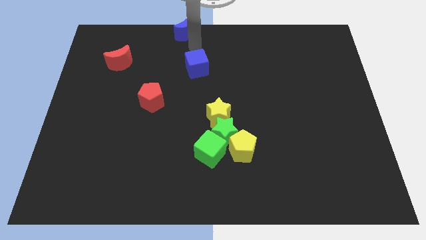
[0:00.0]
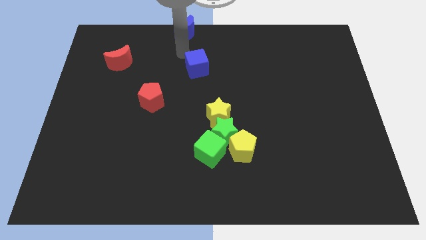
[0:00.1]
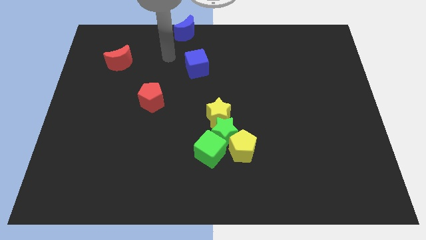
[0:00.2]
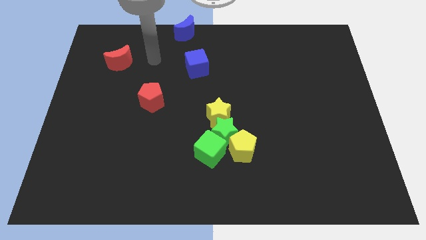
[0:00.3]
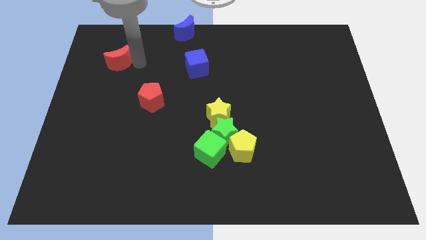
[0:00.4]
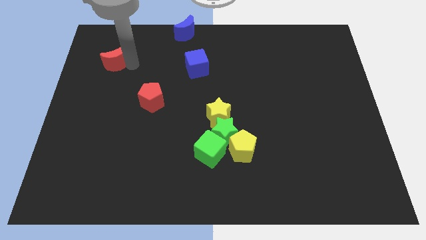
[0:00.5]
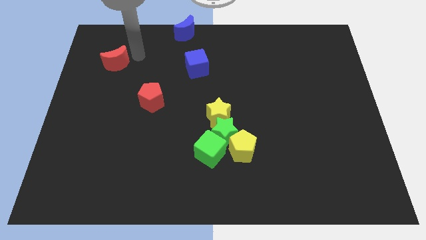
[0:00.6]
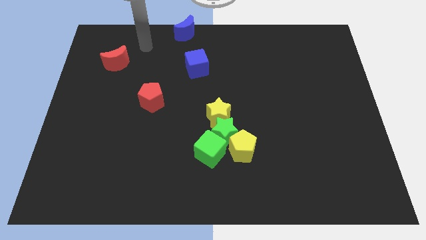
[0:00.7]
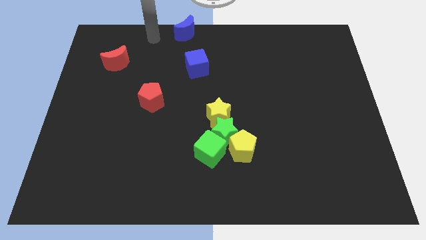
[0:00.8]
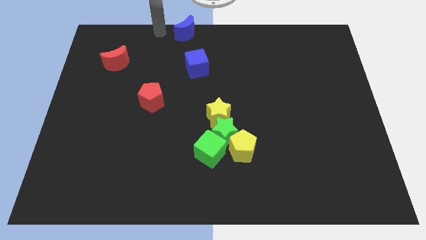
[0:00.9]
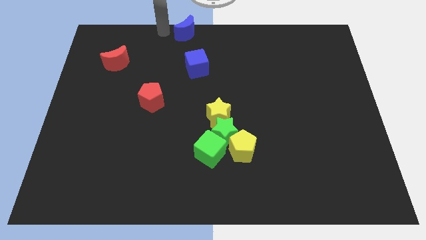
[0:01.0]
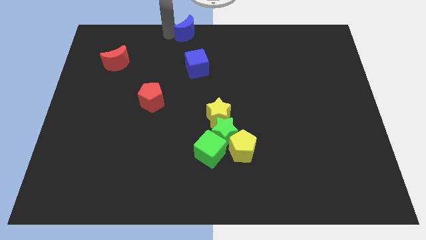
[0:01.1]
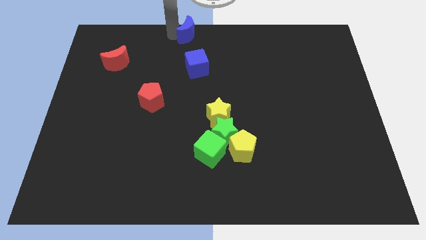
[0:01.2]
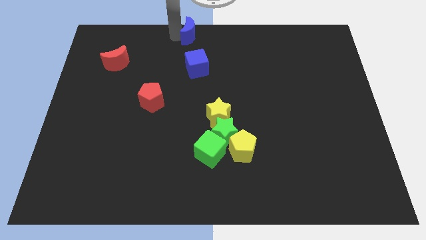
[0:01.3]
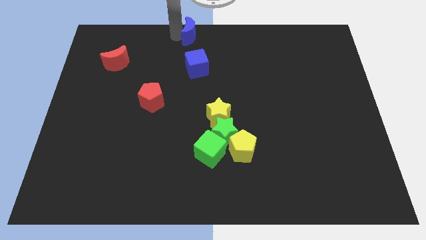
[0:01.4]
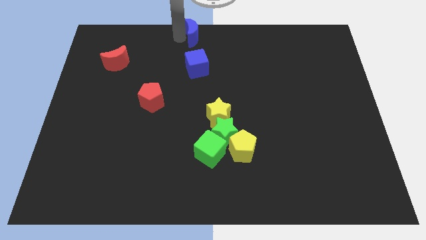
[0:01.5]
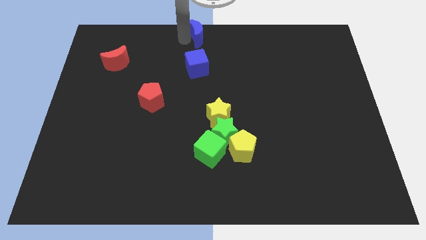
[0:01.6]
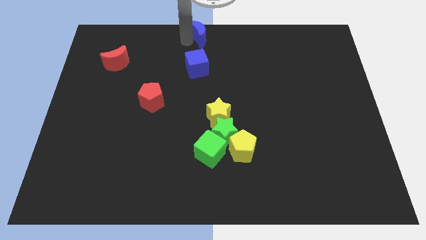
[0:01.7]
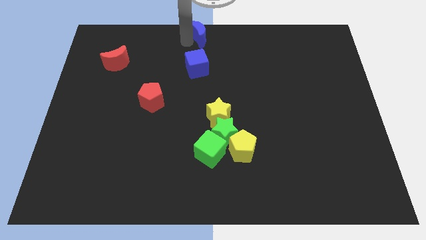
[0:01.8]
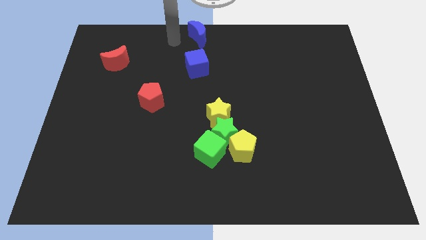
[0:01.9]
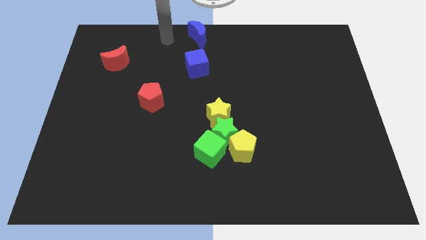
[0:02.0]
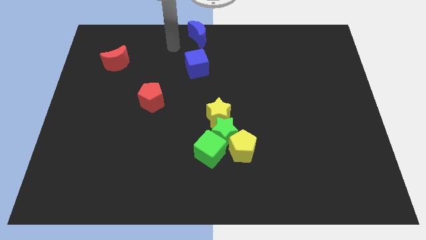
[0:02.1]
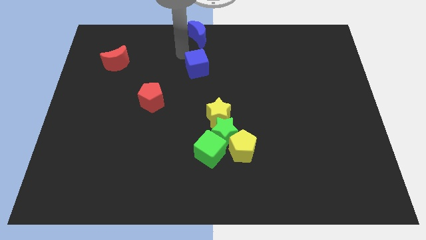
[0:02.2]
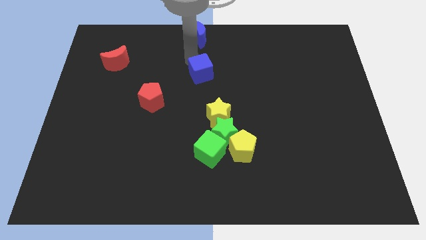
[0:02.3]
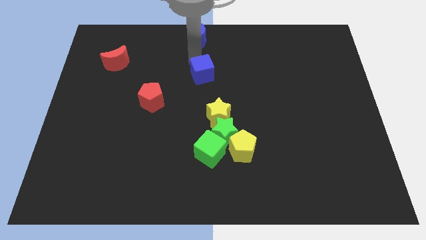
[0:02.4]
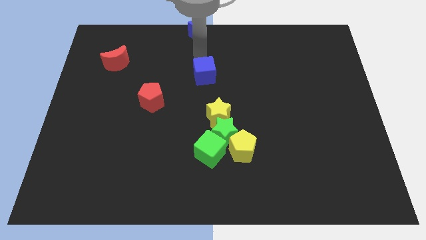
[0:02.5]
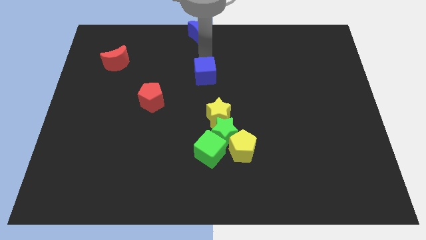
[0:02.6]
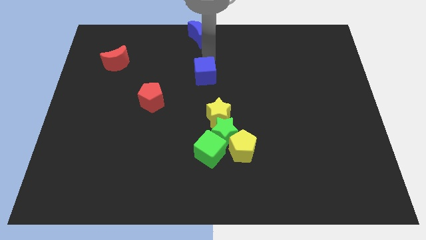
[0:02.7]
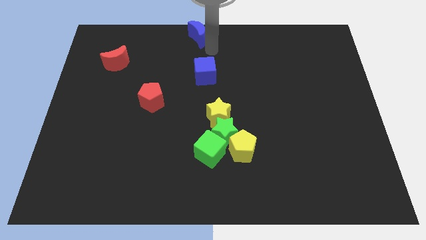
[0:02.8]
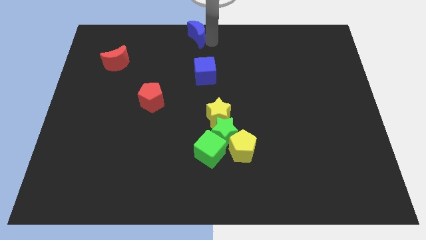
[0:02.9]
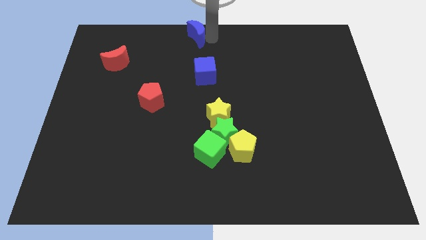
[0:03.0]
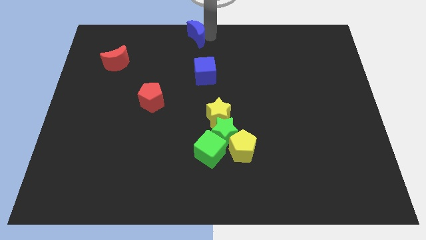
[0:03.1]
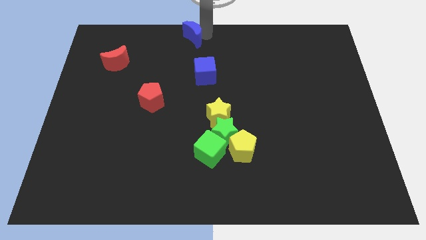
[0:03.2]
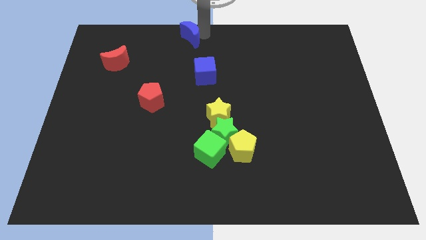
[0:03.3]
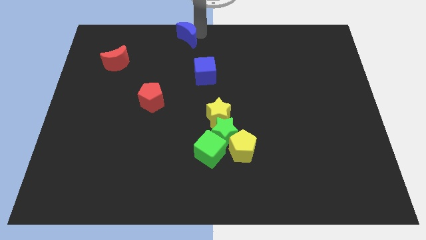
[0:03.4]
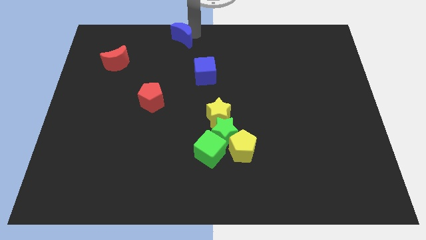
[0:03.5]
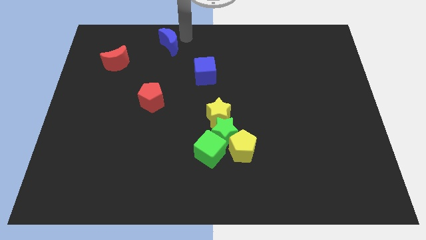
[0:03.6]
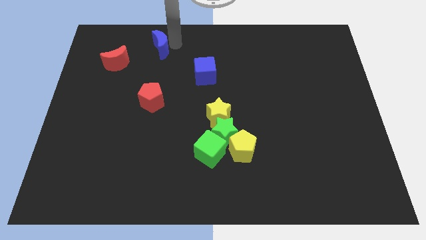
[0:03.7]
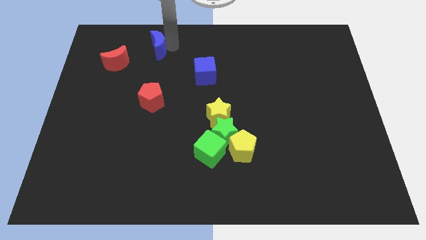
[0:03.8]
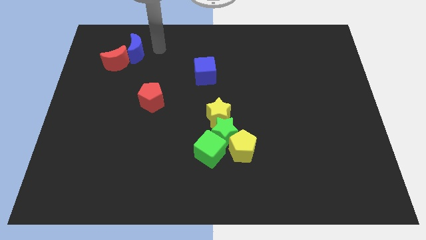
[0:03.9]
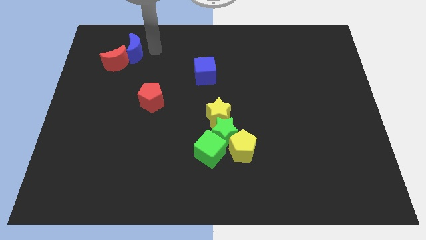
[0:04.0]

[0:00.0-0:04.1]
push the blue moon in to the red crescent

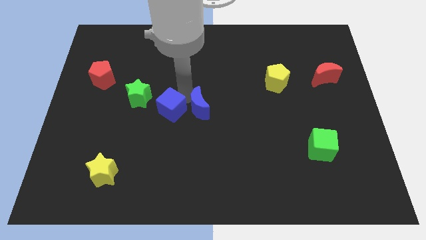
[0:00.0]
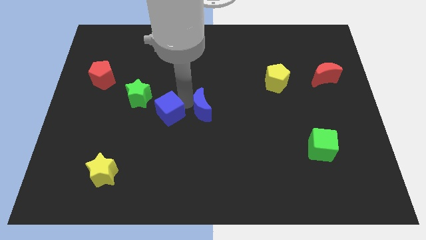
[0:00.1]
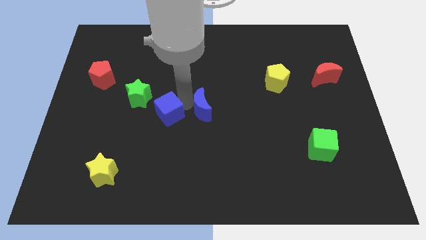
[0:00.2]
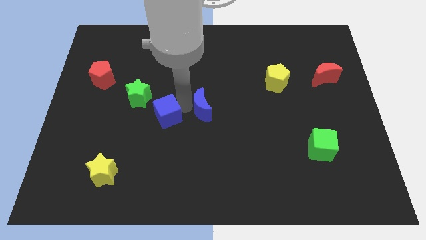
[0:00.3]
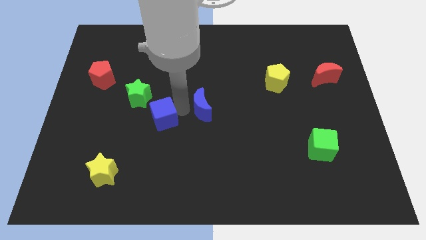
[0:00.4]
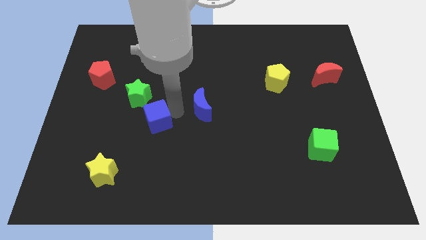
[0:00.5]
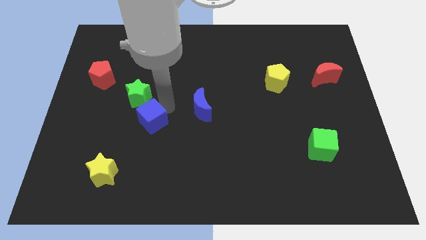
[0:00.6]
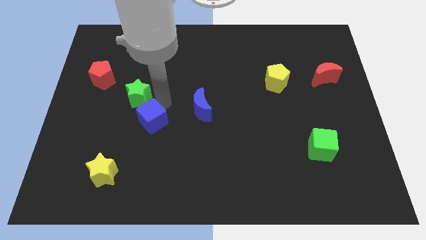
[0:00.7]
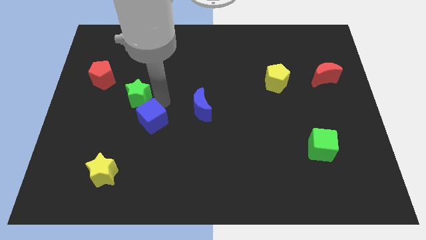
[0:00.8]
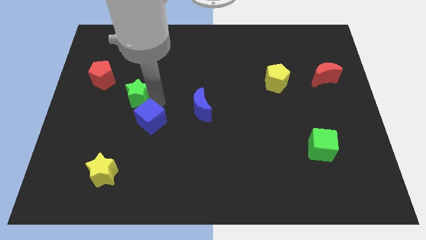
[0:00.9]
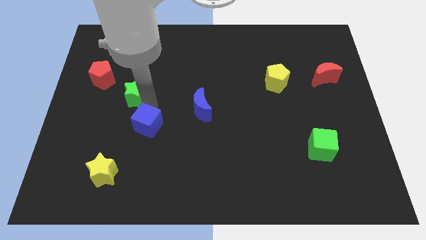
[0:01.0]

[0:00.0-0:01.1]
separate blue cube from blue moon

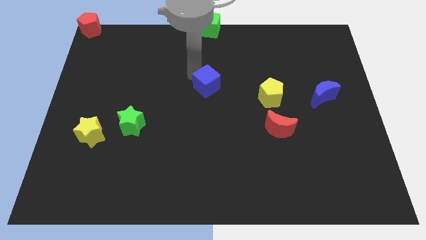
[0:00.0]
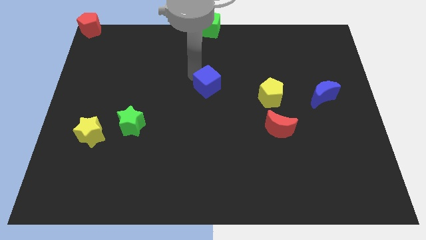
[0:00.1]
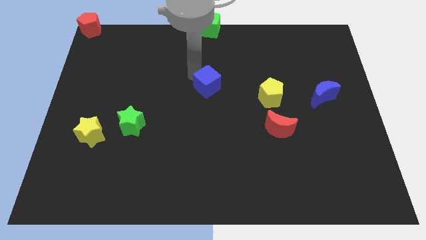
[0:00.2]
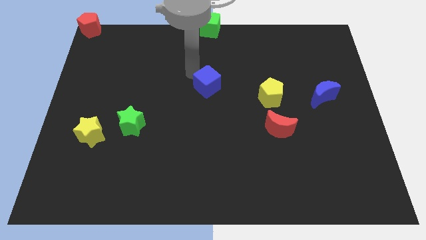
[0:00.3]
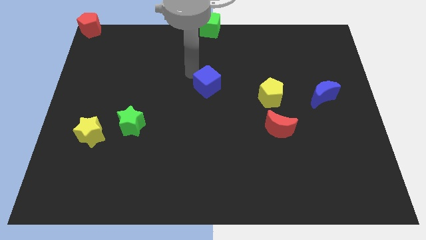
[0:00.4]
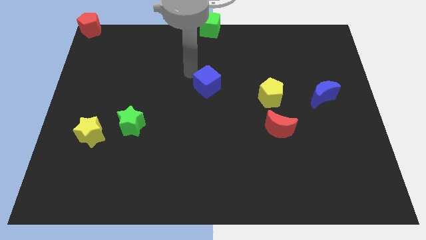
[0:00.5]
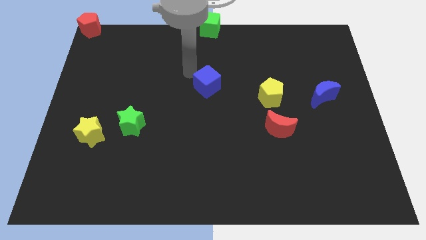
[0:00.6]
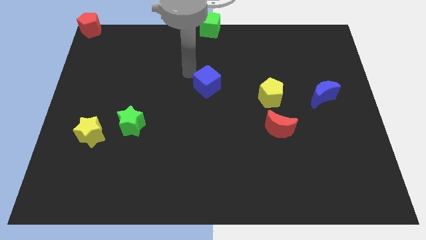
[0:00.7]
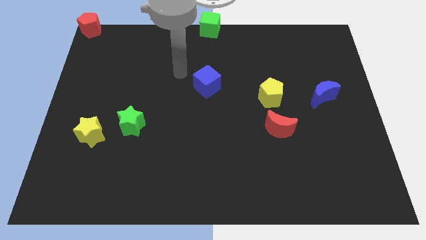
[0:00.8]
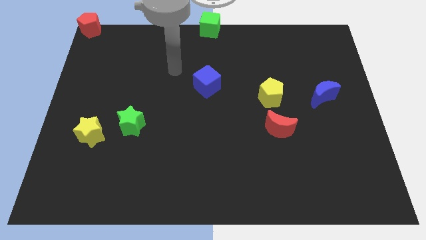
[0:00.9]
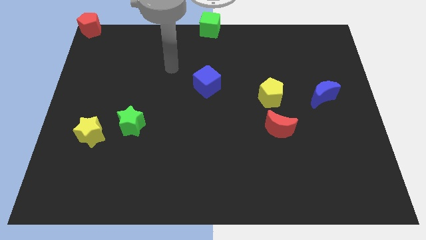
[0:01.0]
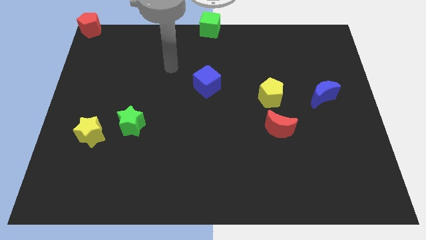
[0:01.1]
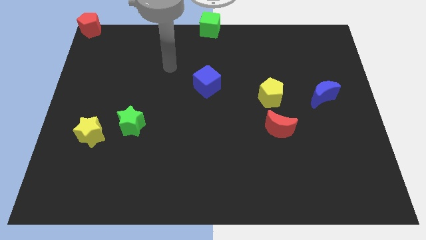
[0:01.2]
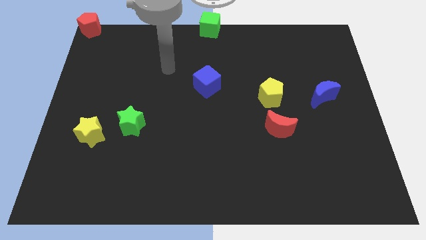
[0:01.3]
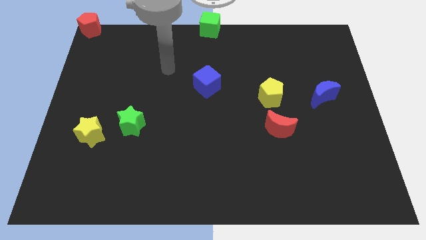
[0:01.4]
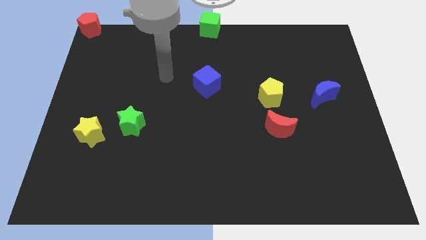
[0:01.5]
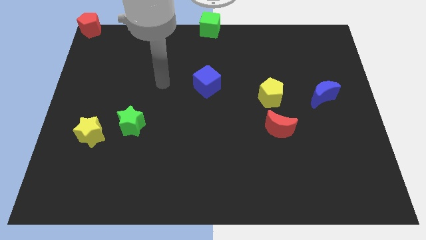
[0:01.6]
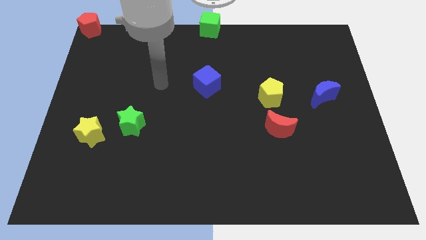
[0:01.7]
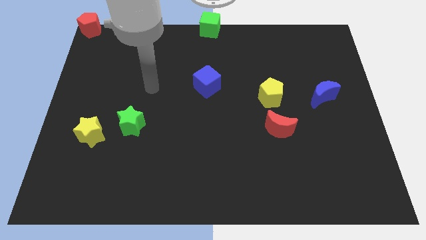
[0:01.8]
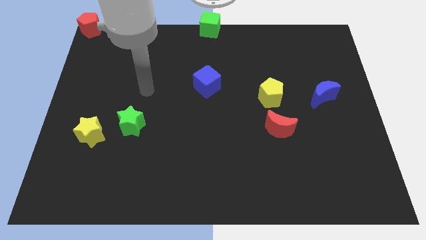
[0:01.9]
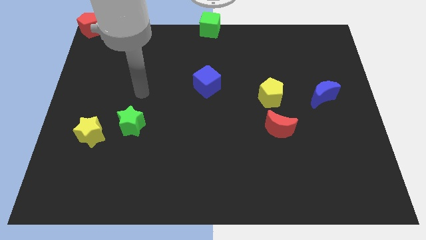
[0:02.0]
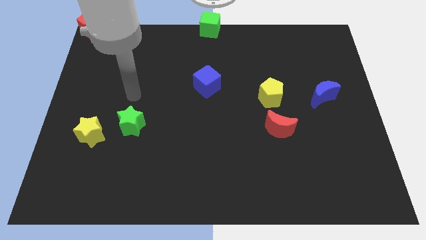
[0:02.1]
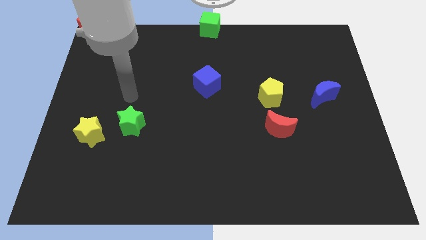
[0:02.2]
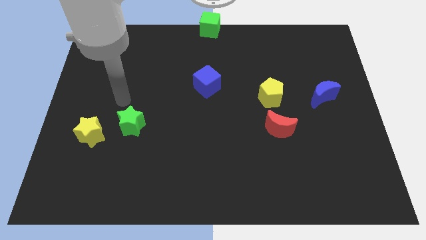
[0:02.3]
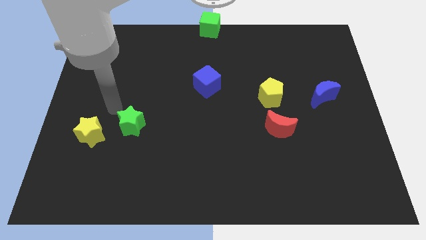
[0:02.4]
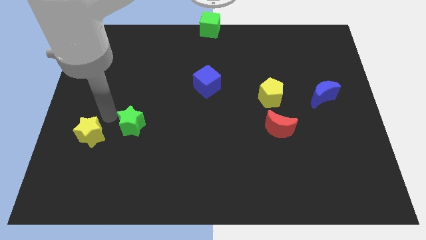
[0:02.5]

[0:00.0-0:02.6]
move your arm and point towards green star

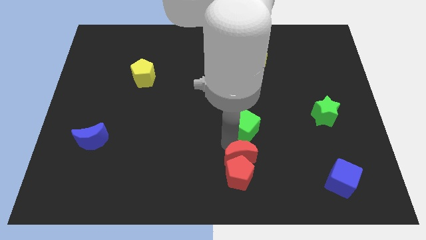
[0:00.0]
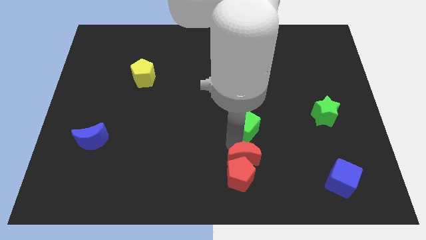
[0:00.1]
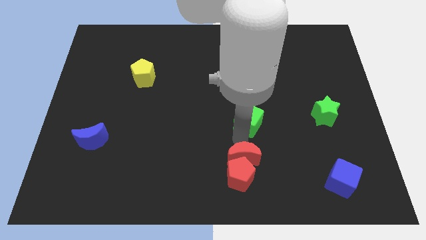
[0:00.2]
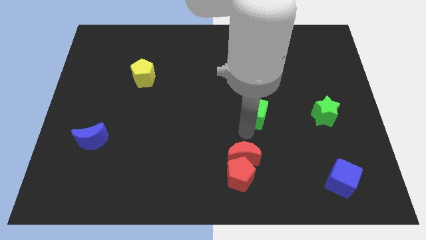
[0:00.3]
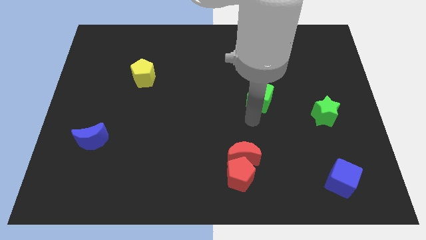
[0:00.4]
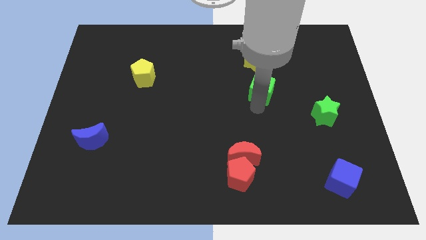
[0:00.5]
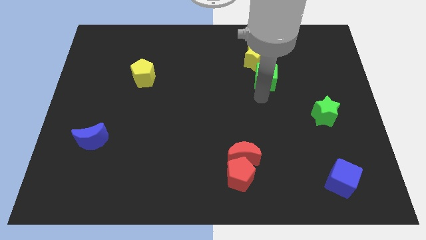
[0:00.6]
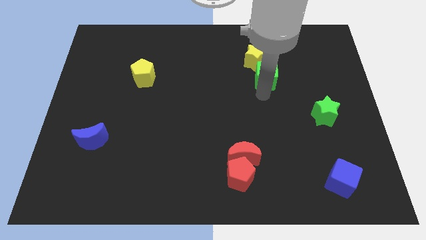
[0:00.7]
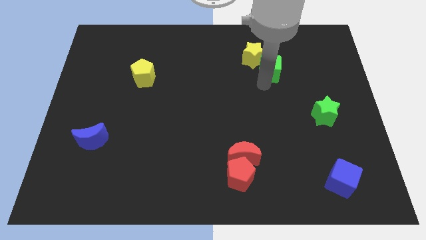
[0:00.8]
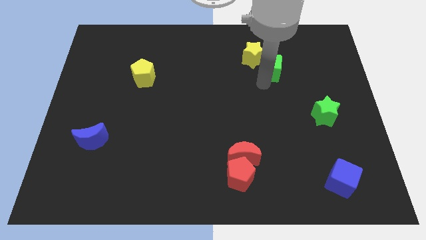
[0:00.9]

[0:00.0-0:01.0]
push the green cube upward
